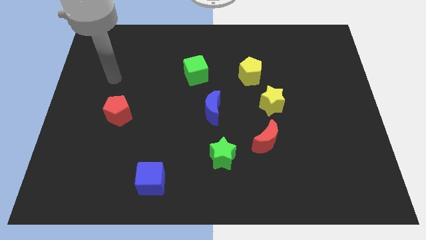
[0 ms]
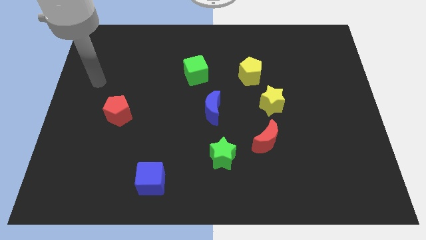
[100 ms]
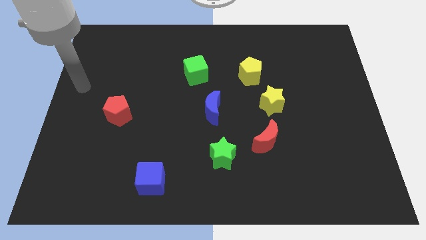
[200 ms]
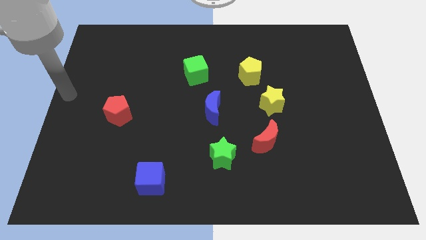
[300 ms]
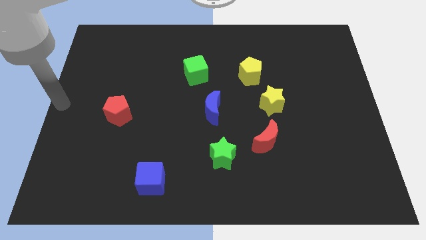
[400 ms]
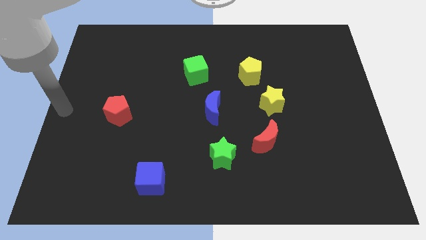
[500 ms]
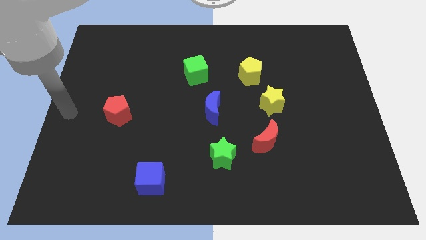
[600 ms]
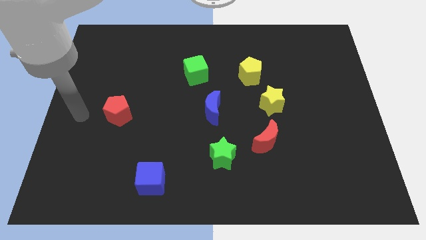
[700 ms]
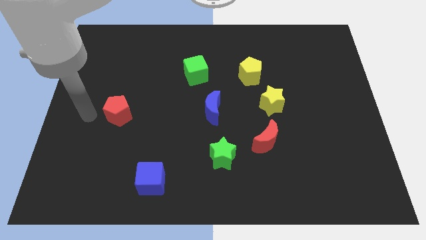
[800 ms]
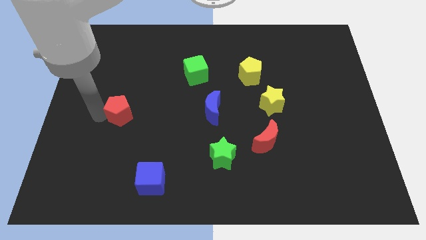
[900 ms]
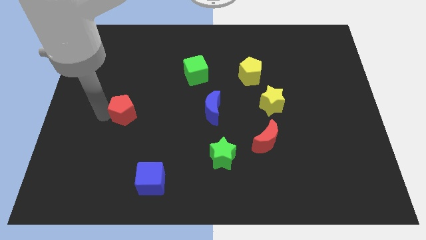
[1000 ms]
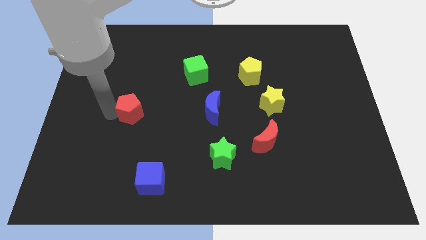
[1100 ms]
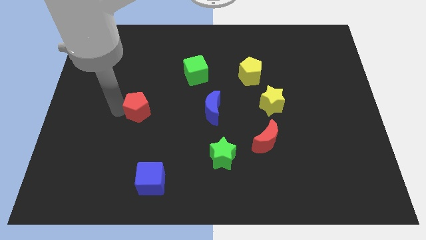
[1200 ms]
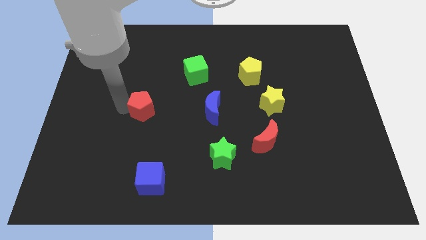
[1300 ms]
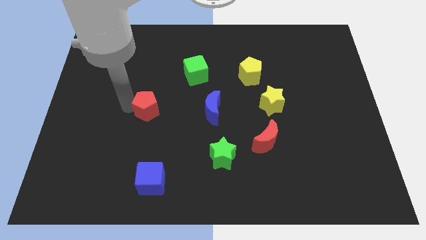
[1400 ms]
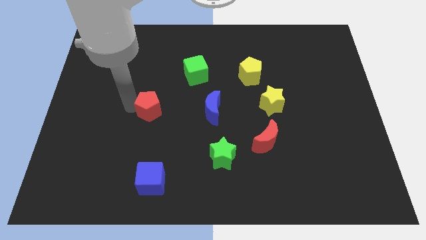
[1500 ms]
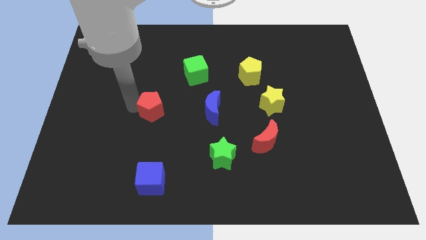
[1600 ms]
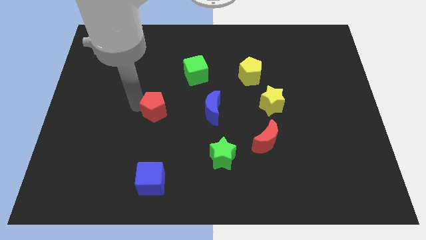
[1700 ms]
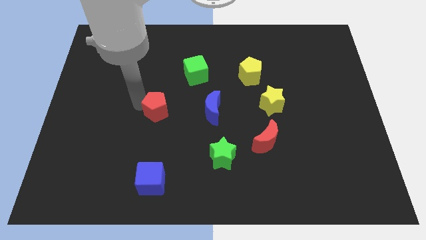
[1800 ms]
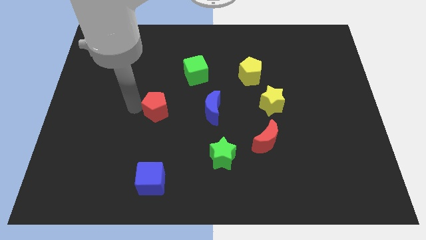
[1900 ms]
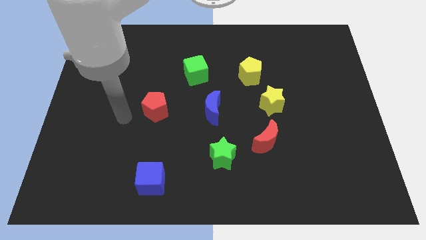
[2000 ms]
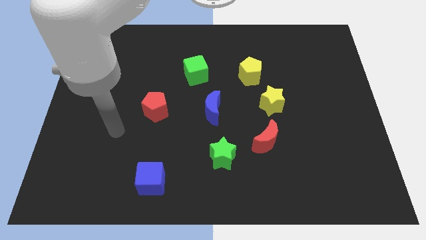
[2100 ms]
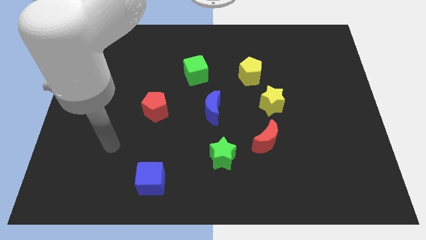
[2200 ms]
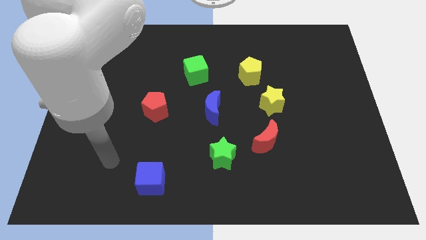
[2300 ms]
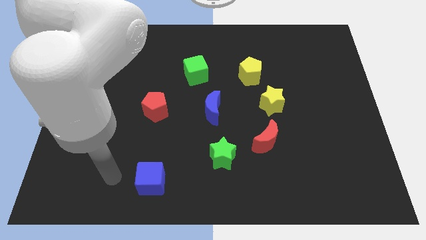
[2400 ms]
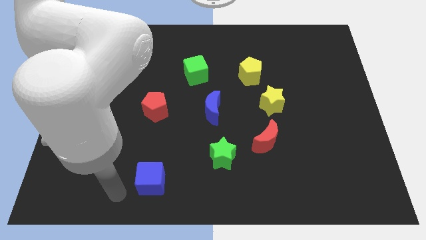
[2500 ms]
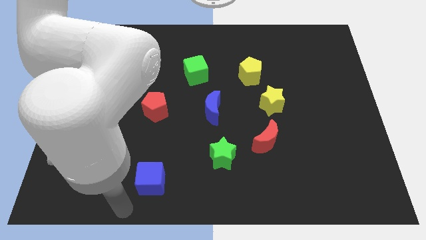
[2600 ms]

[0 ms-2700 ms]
move the red pentagon to the left of the blue moon

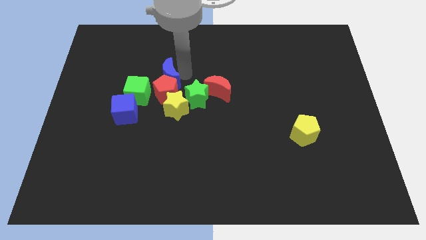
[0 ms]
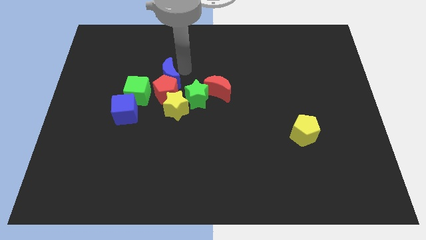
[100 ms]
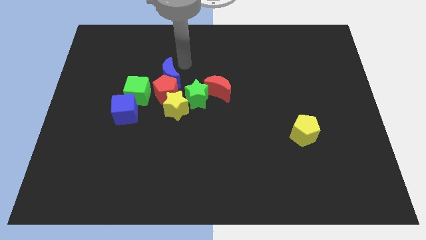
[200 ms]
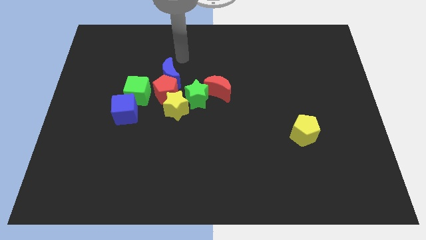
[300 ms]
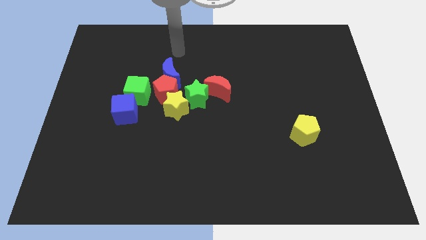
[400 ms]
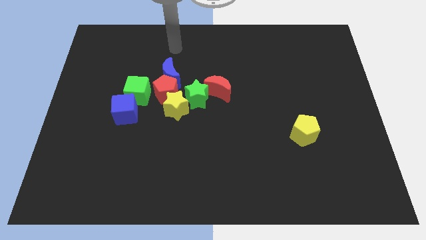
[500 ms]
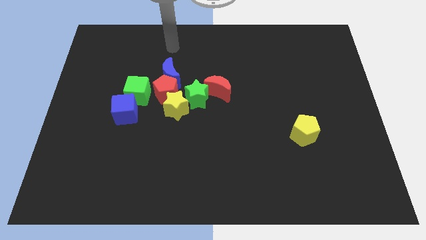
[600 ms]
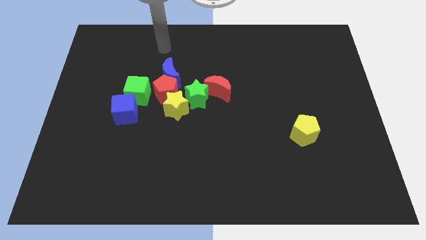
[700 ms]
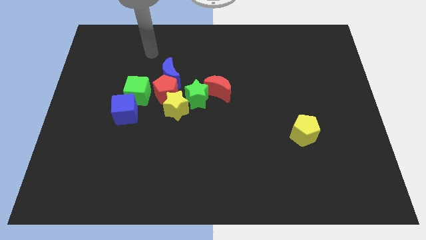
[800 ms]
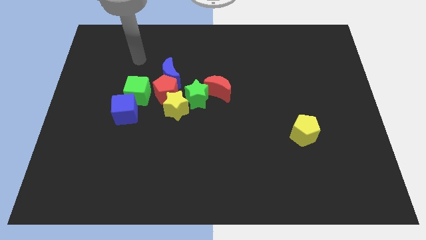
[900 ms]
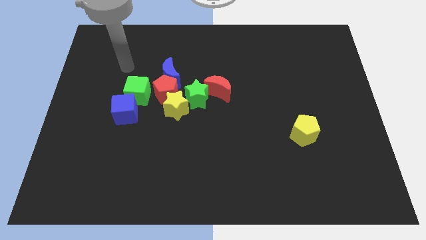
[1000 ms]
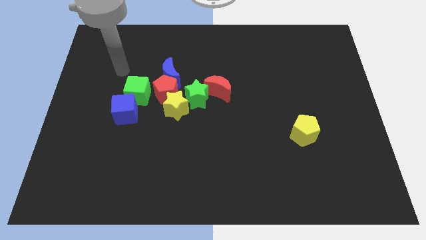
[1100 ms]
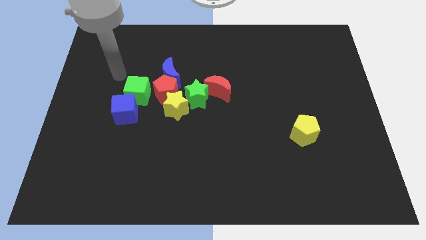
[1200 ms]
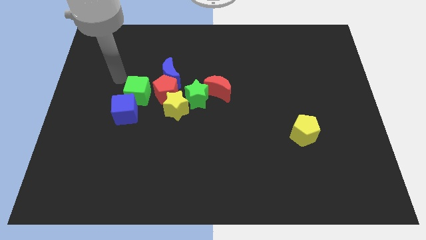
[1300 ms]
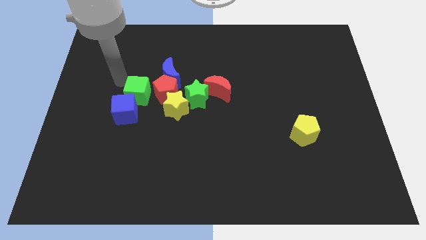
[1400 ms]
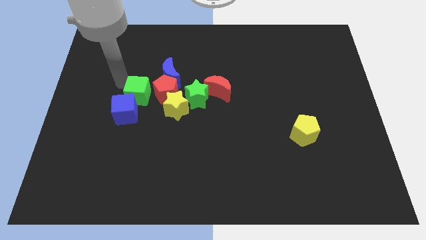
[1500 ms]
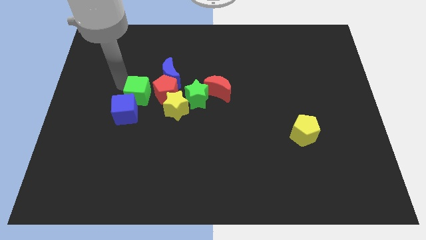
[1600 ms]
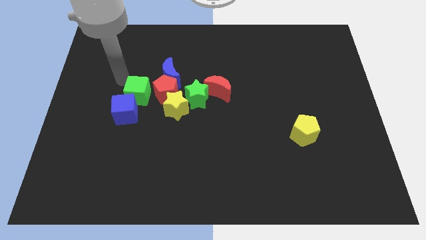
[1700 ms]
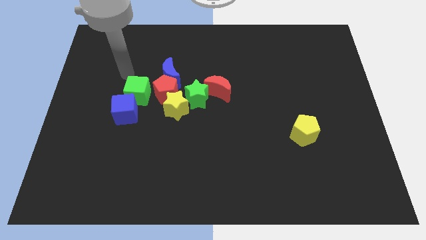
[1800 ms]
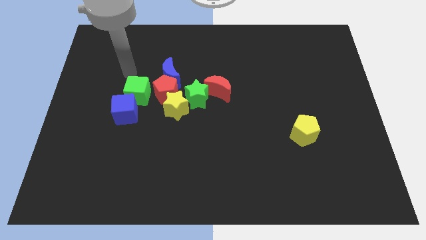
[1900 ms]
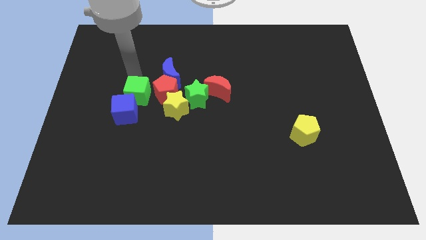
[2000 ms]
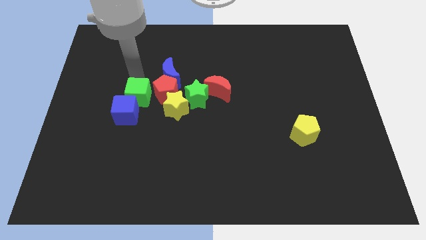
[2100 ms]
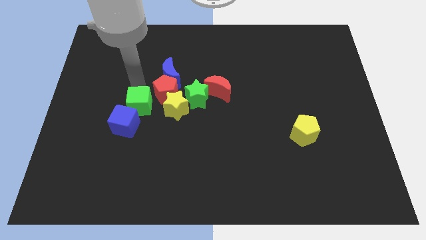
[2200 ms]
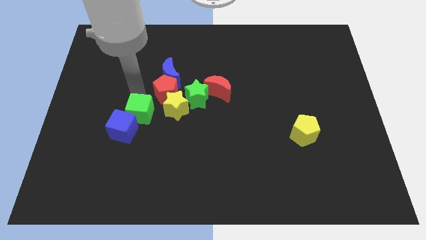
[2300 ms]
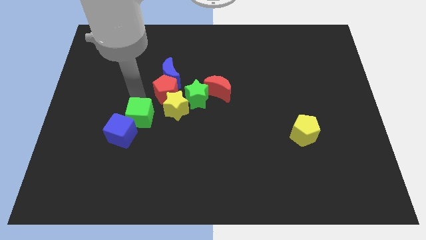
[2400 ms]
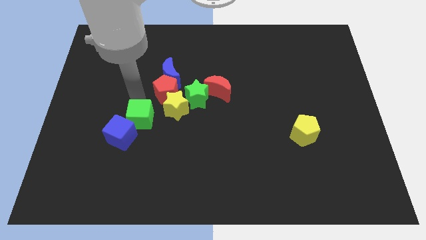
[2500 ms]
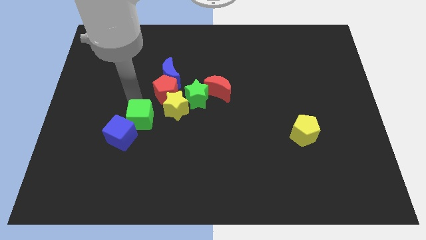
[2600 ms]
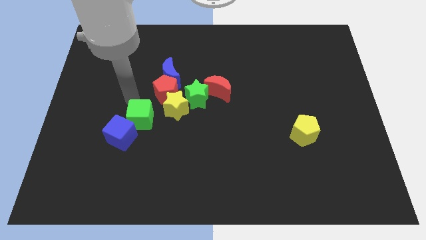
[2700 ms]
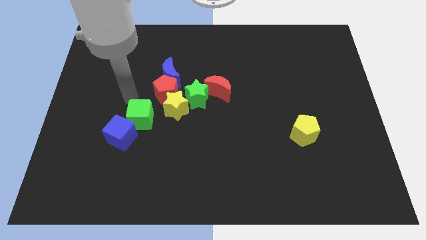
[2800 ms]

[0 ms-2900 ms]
push blue cube with the green cube

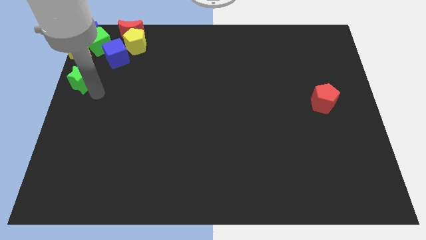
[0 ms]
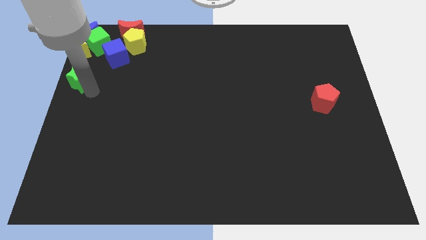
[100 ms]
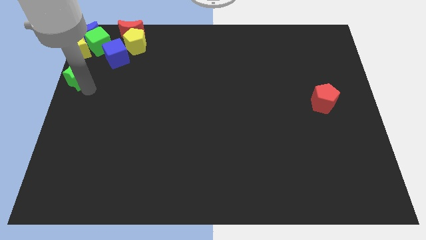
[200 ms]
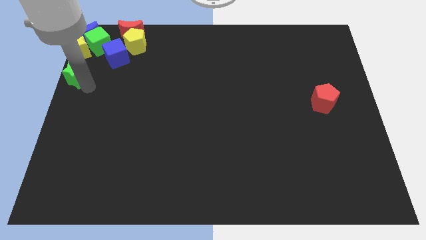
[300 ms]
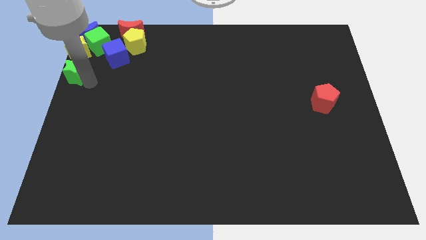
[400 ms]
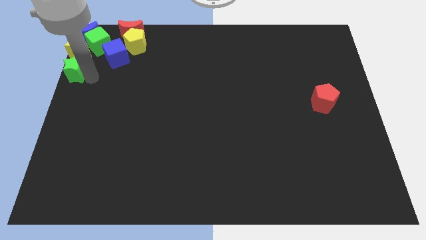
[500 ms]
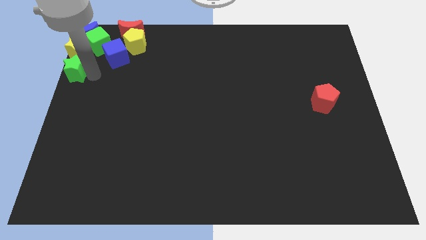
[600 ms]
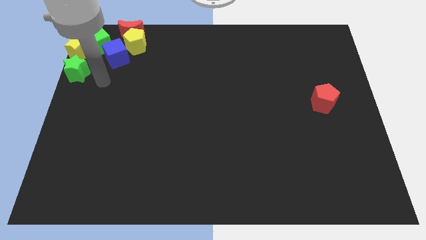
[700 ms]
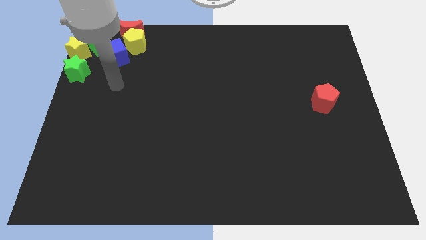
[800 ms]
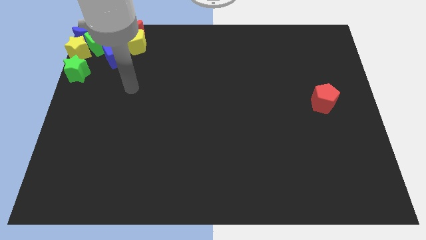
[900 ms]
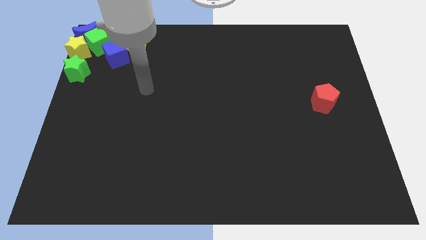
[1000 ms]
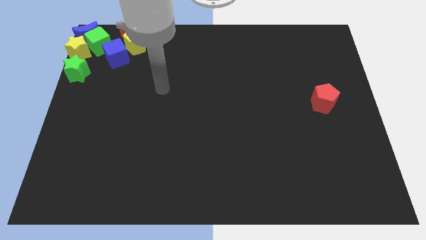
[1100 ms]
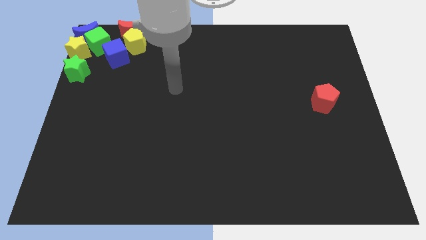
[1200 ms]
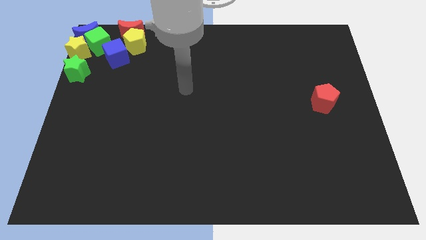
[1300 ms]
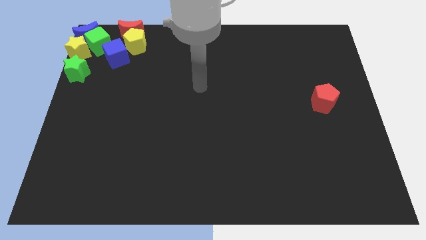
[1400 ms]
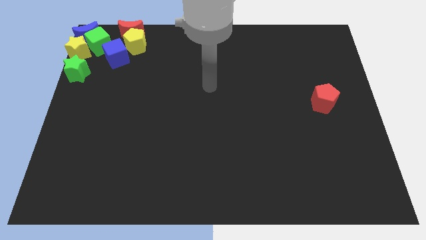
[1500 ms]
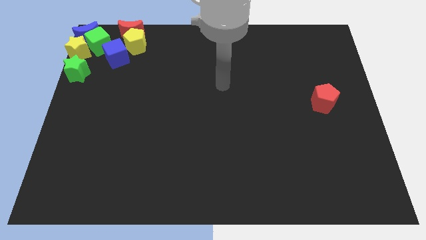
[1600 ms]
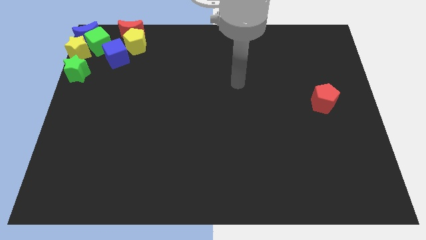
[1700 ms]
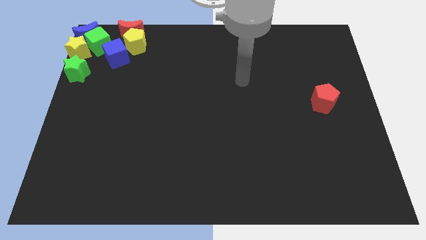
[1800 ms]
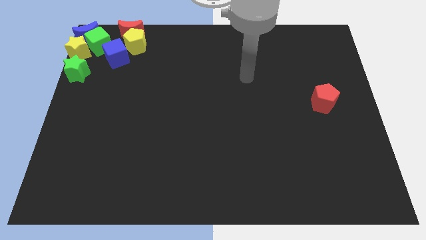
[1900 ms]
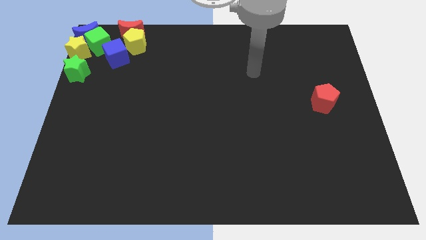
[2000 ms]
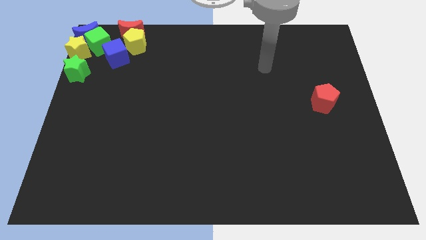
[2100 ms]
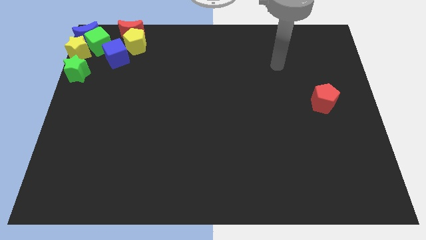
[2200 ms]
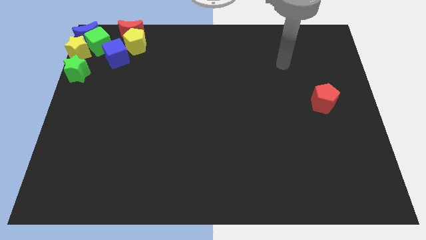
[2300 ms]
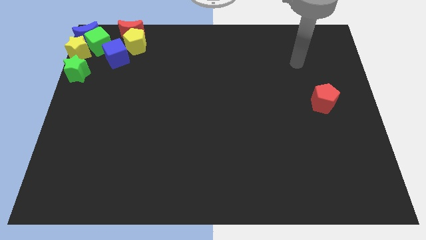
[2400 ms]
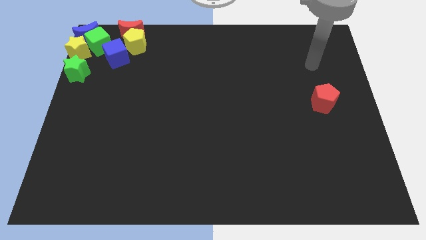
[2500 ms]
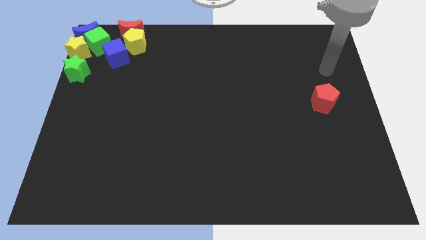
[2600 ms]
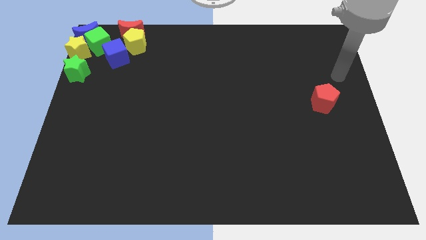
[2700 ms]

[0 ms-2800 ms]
move your arm to the top of the red pentagon

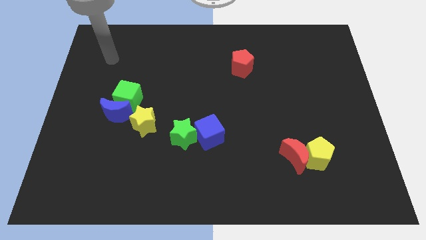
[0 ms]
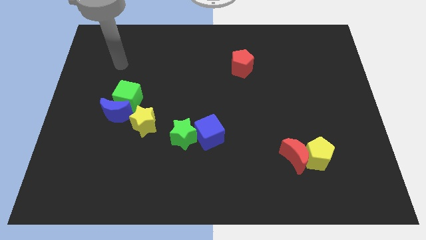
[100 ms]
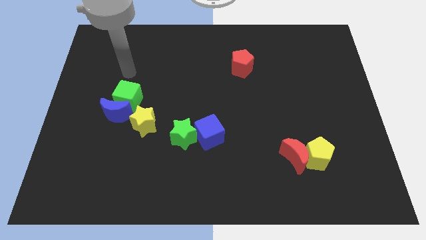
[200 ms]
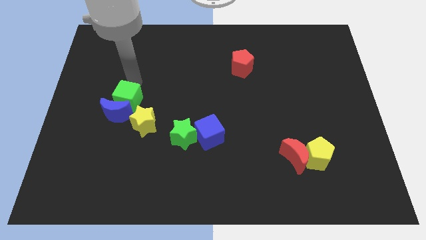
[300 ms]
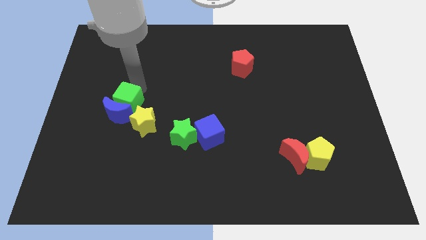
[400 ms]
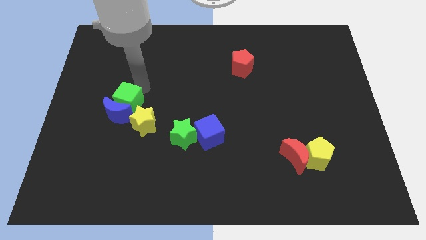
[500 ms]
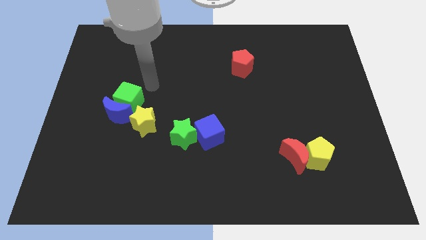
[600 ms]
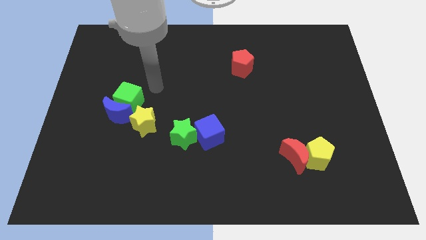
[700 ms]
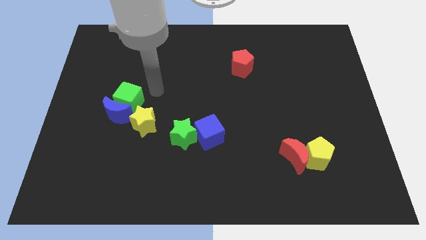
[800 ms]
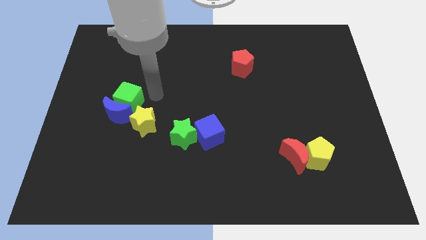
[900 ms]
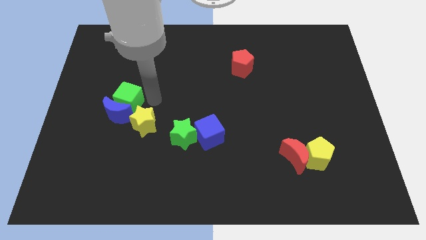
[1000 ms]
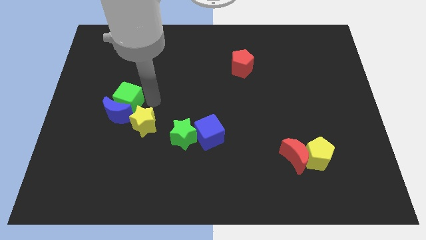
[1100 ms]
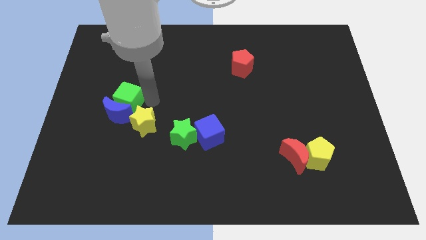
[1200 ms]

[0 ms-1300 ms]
move your arm to the right of the green cube
